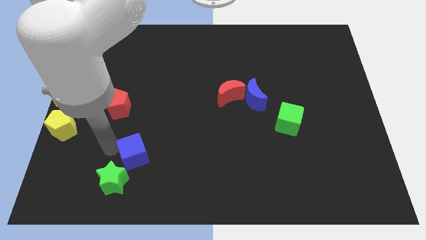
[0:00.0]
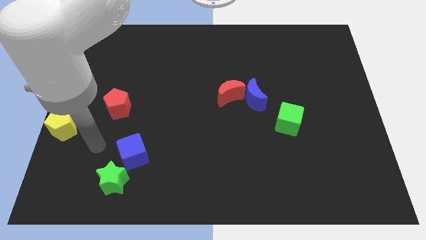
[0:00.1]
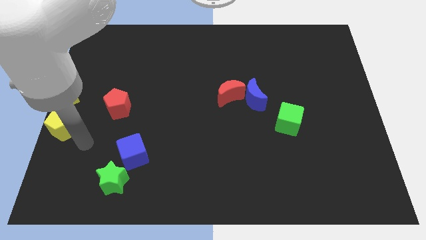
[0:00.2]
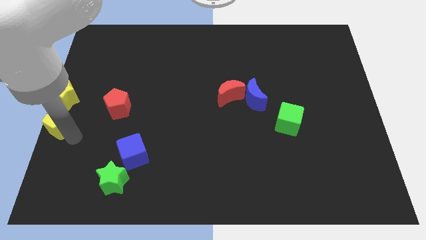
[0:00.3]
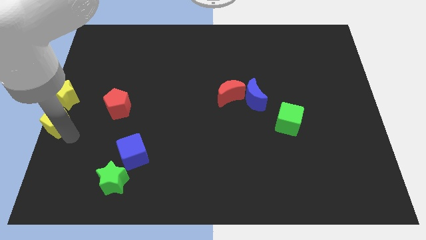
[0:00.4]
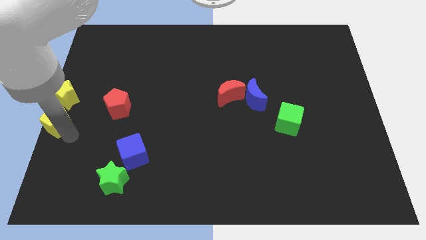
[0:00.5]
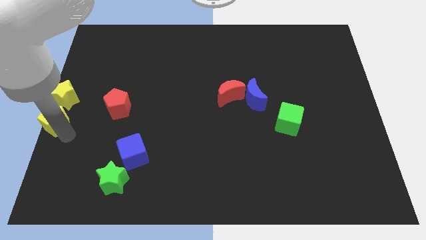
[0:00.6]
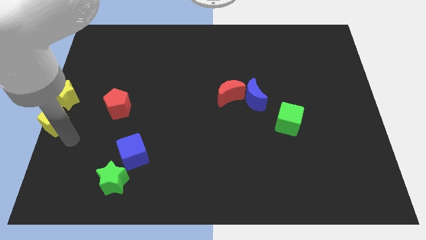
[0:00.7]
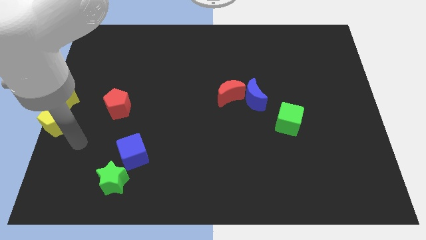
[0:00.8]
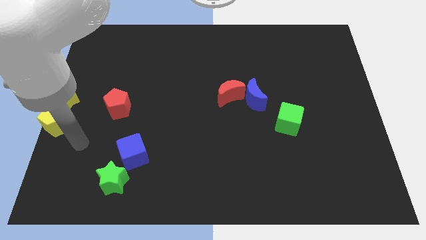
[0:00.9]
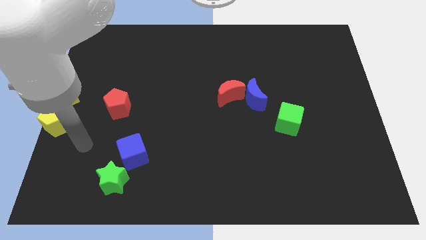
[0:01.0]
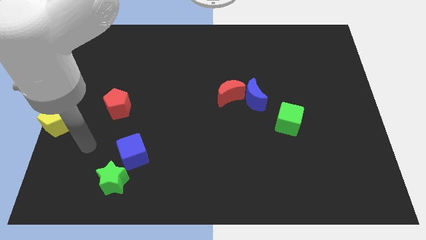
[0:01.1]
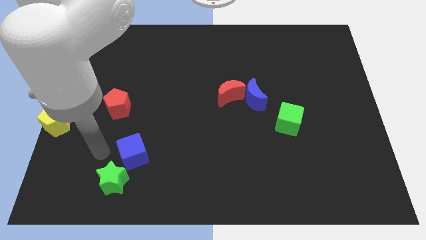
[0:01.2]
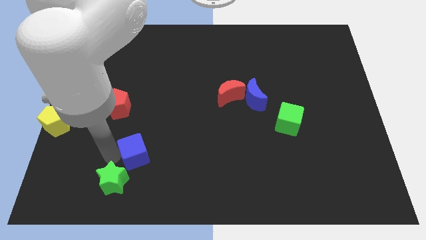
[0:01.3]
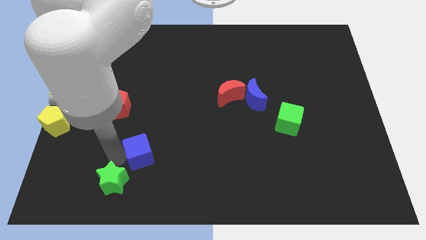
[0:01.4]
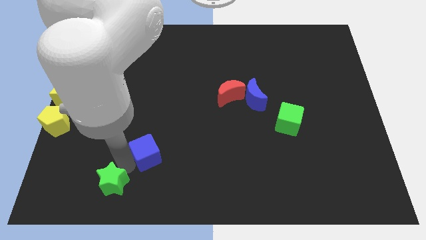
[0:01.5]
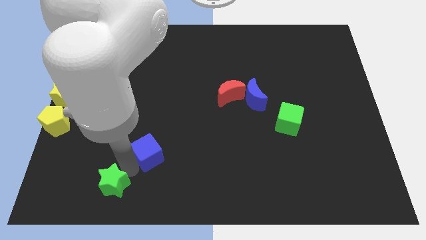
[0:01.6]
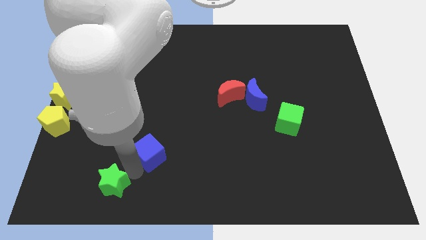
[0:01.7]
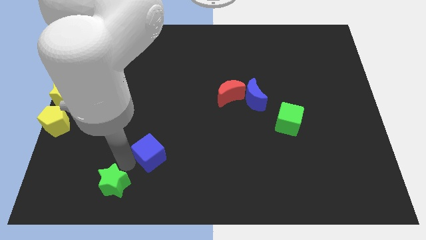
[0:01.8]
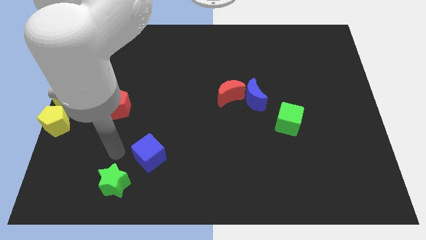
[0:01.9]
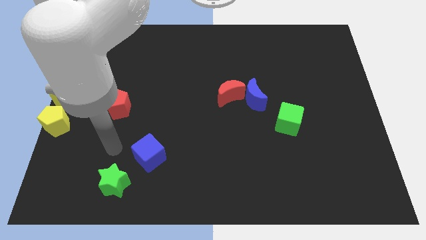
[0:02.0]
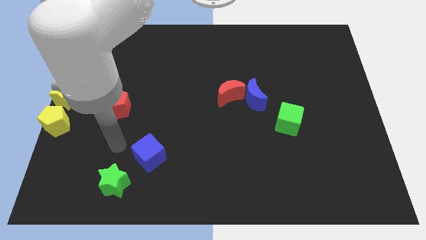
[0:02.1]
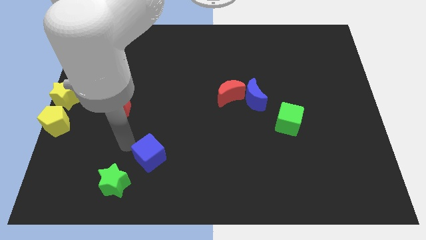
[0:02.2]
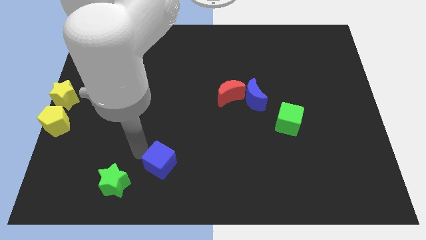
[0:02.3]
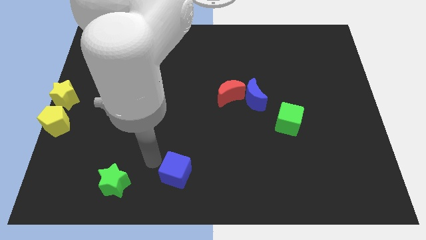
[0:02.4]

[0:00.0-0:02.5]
move blue cube right beside the green star

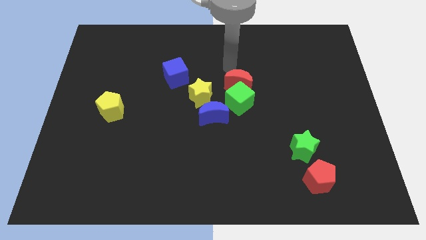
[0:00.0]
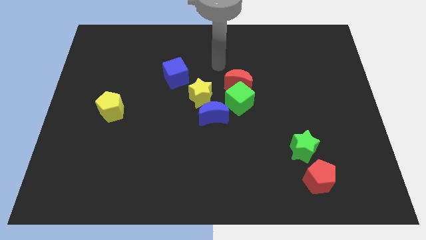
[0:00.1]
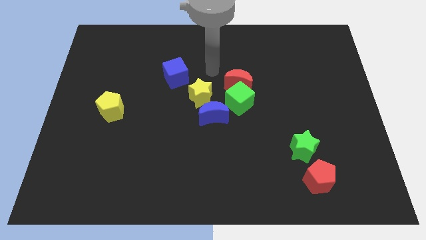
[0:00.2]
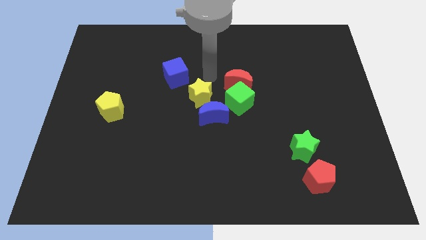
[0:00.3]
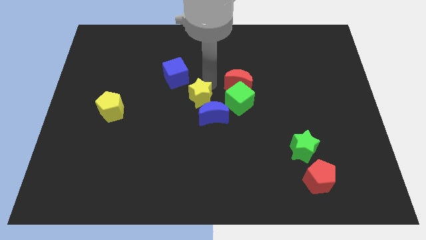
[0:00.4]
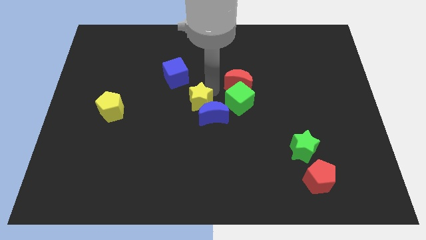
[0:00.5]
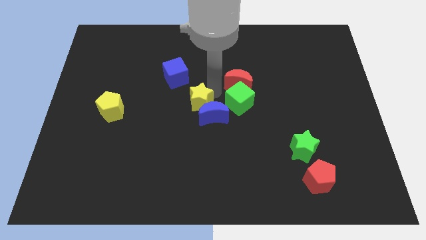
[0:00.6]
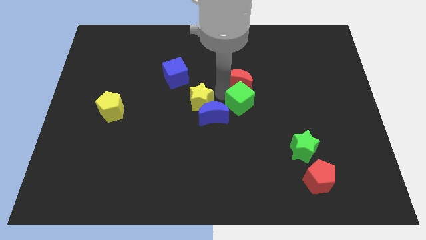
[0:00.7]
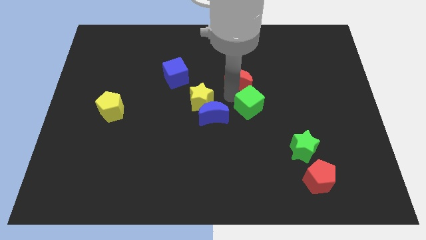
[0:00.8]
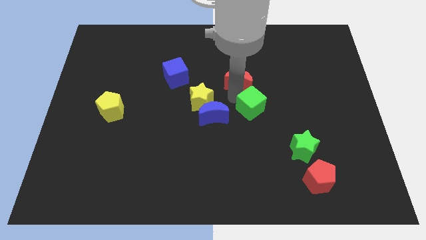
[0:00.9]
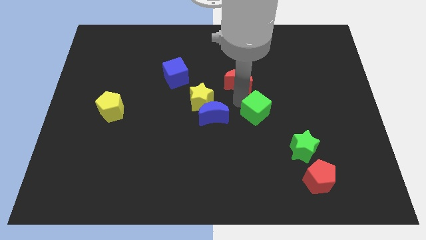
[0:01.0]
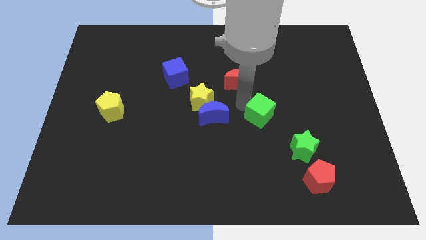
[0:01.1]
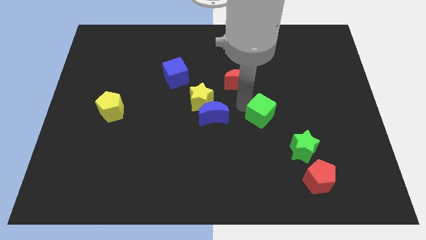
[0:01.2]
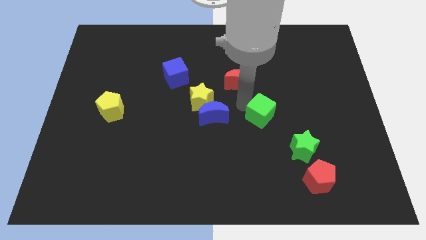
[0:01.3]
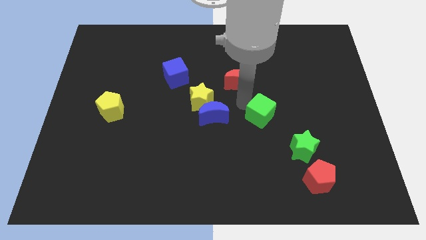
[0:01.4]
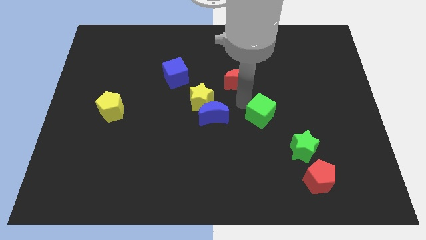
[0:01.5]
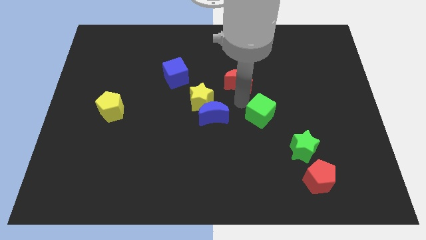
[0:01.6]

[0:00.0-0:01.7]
place the green cube to the right of the blue crescent

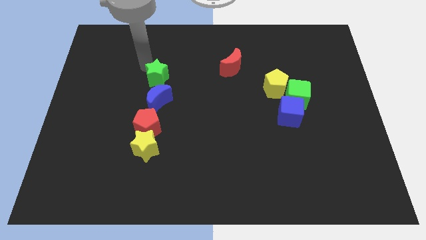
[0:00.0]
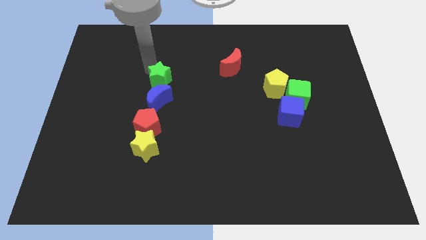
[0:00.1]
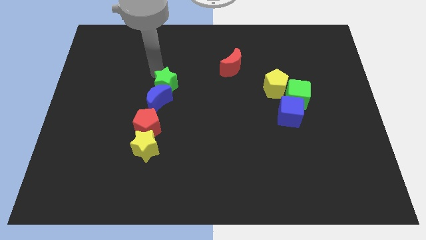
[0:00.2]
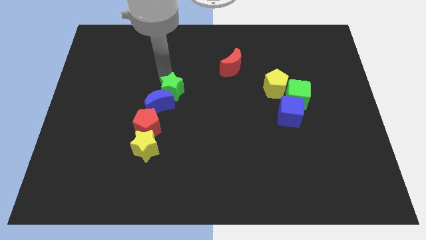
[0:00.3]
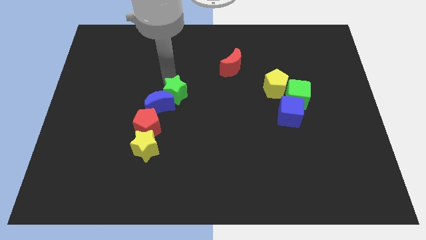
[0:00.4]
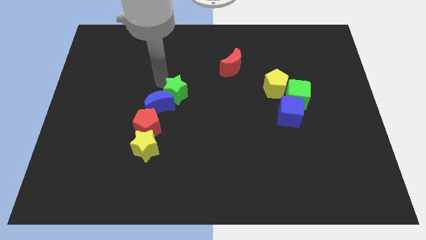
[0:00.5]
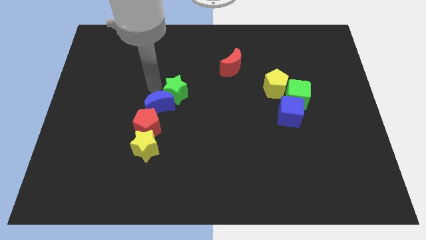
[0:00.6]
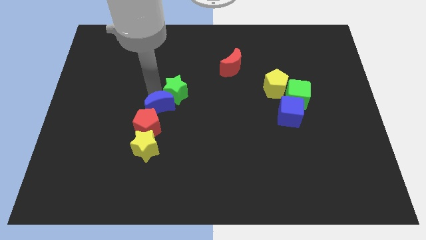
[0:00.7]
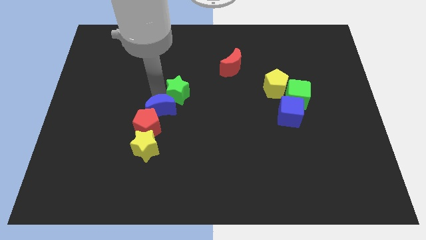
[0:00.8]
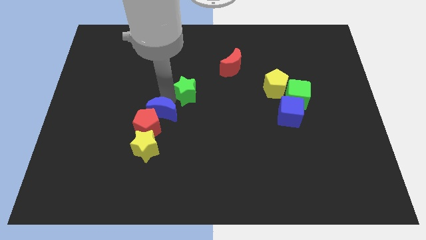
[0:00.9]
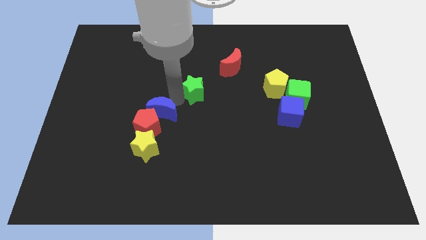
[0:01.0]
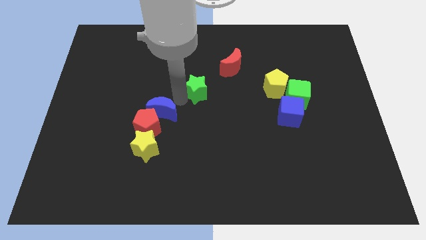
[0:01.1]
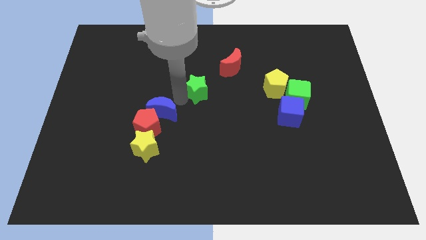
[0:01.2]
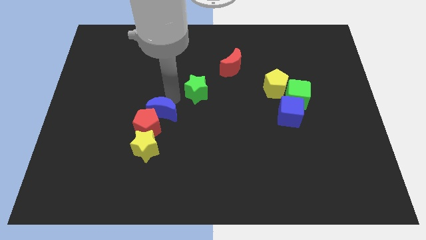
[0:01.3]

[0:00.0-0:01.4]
separate green star from blue moon

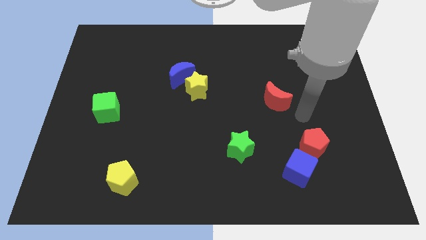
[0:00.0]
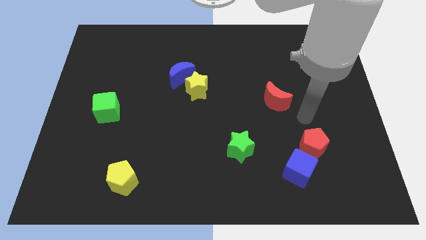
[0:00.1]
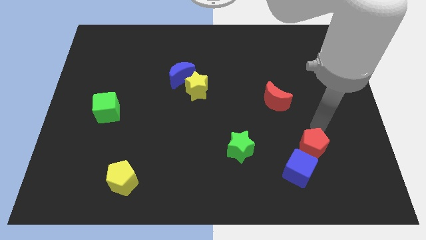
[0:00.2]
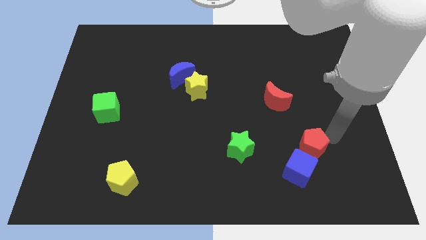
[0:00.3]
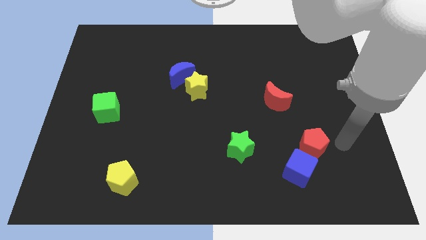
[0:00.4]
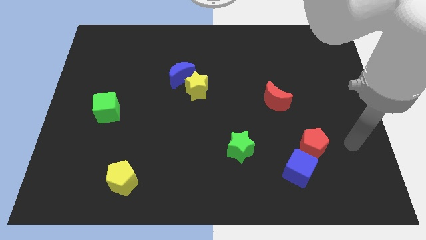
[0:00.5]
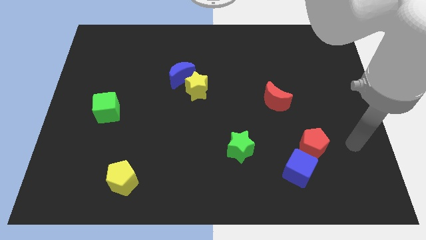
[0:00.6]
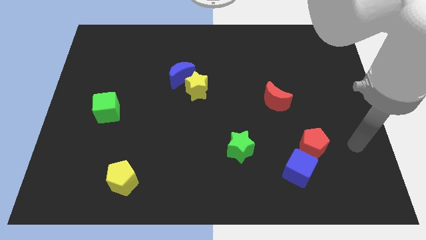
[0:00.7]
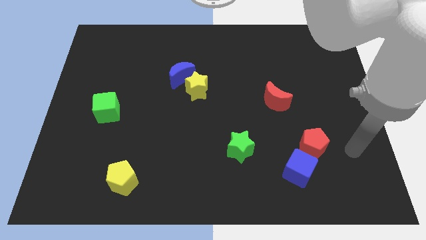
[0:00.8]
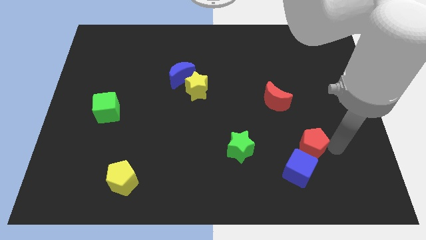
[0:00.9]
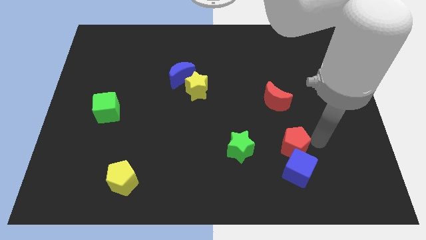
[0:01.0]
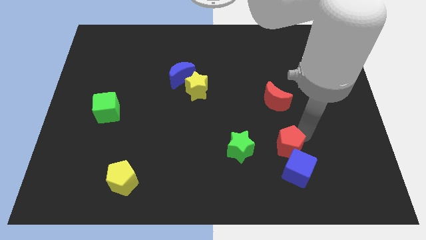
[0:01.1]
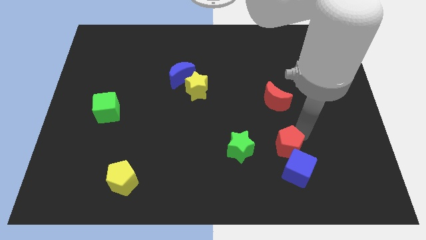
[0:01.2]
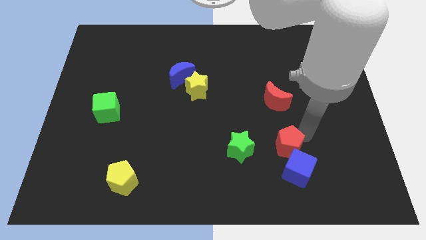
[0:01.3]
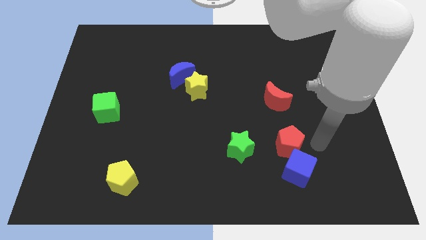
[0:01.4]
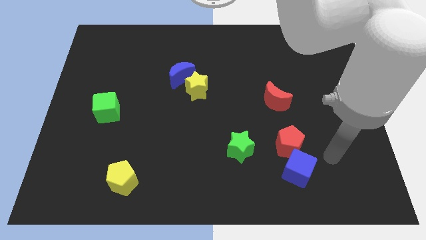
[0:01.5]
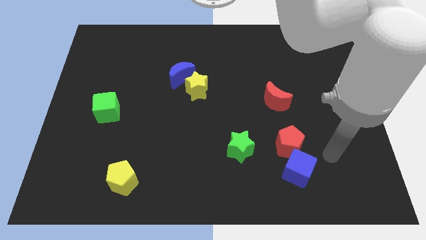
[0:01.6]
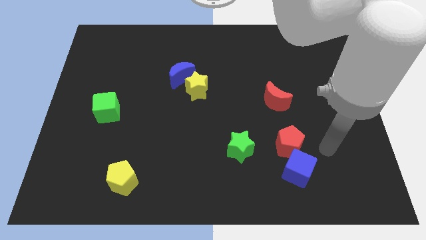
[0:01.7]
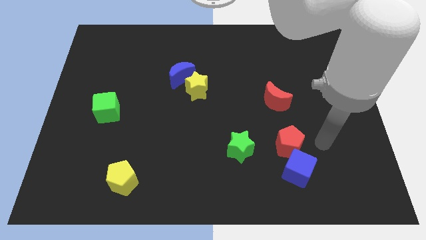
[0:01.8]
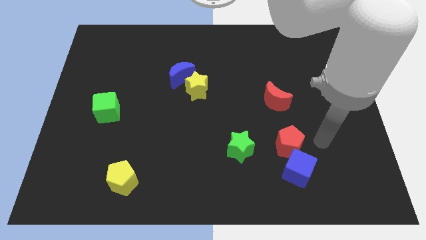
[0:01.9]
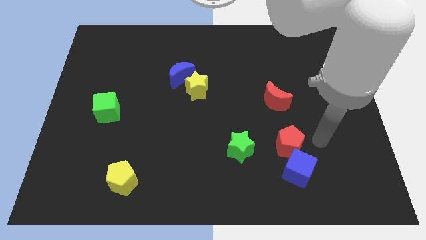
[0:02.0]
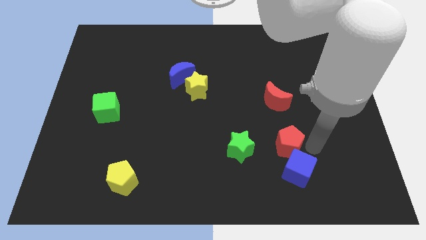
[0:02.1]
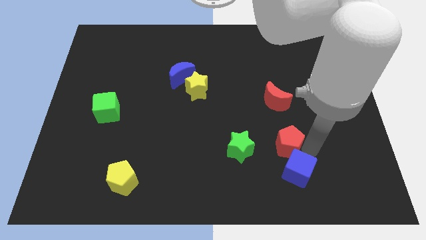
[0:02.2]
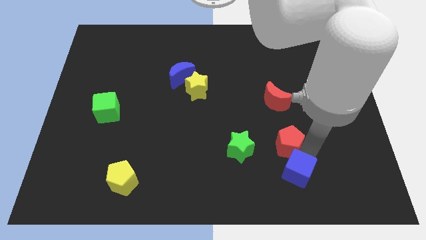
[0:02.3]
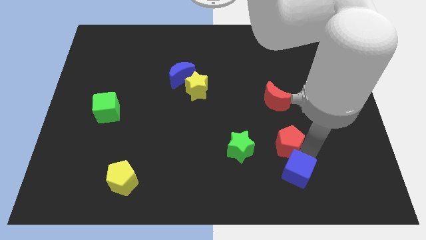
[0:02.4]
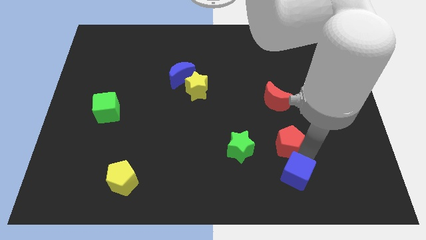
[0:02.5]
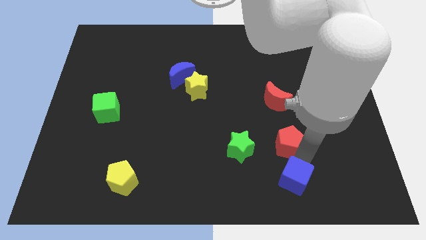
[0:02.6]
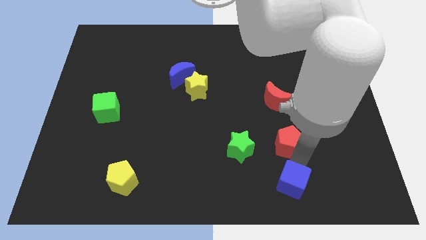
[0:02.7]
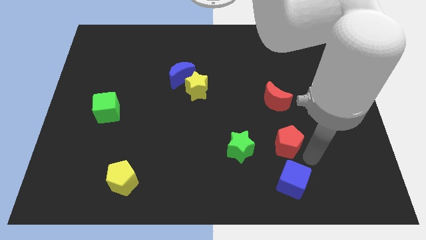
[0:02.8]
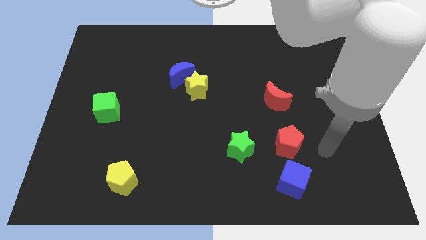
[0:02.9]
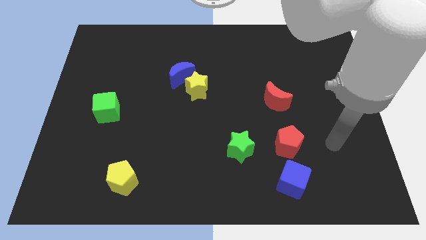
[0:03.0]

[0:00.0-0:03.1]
separate red pentagon from blue cube

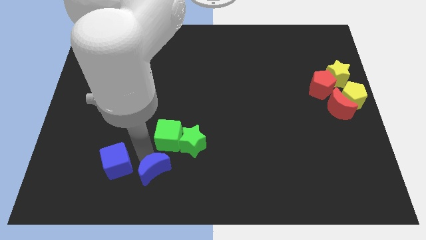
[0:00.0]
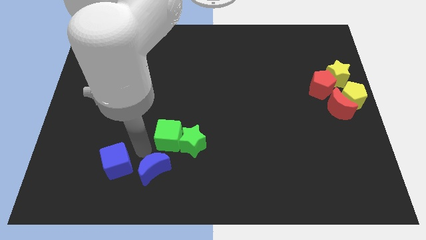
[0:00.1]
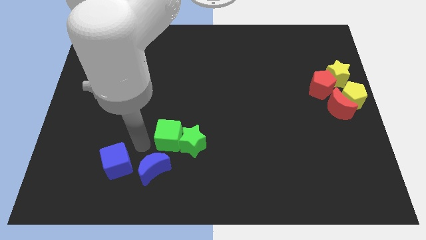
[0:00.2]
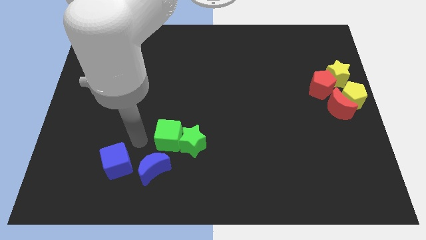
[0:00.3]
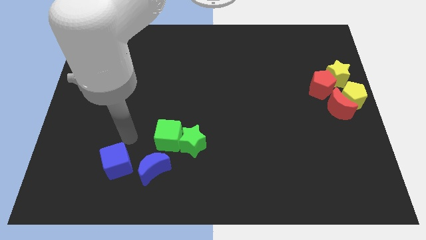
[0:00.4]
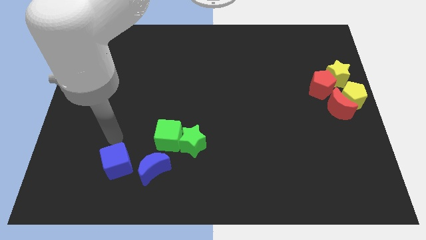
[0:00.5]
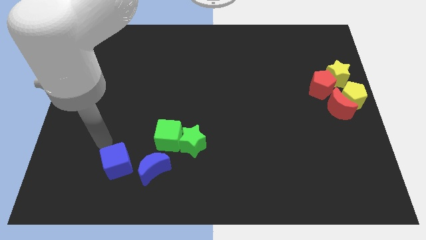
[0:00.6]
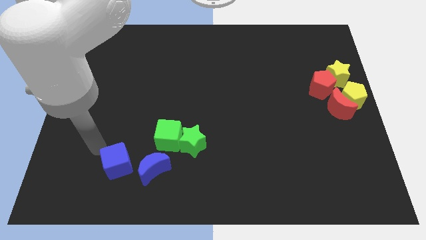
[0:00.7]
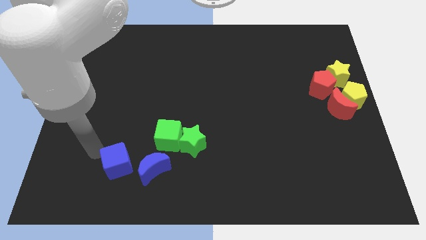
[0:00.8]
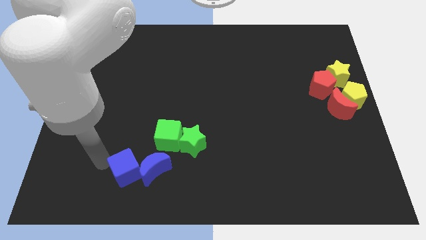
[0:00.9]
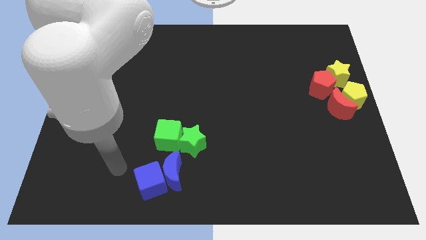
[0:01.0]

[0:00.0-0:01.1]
move the blue cube close to the blue moon
